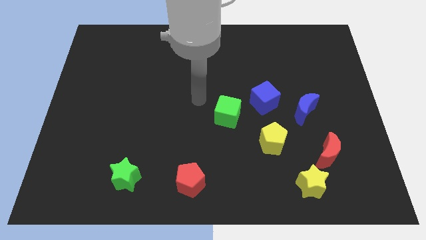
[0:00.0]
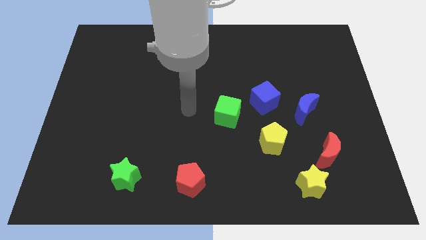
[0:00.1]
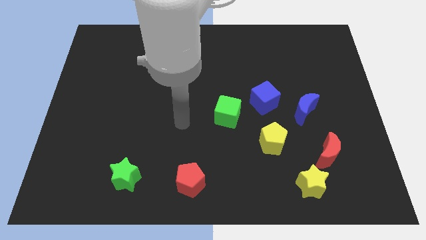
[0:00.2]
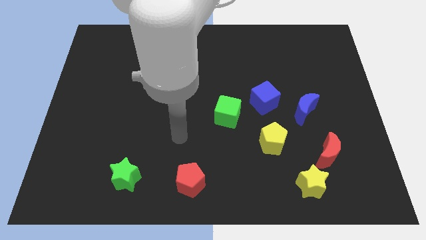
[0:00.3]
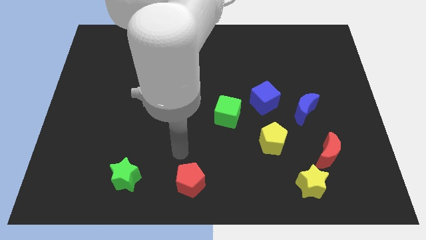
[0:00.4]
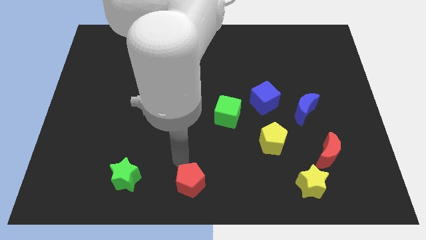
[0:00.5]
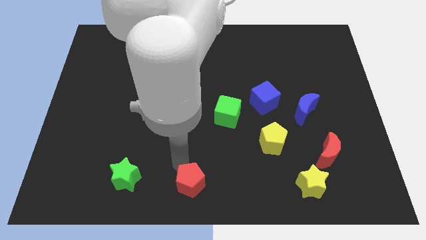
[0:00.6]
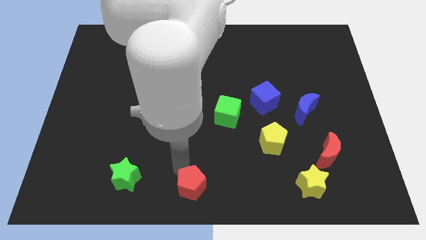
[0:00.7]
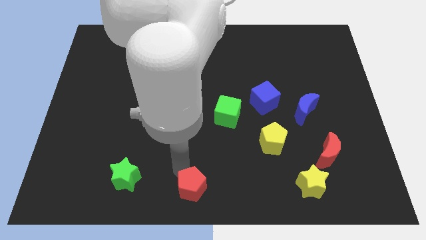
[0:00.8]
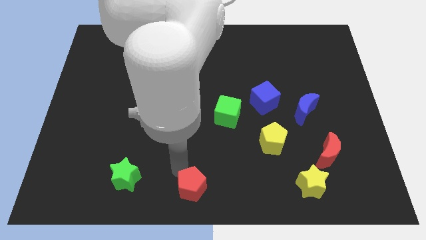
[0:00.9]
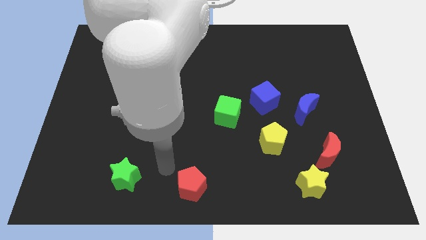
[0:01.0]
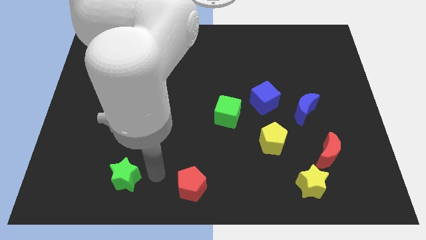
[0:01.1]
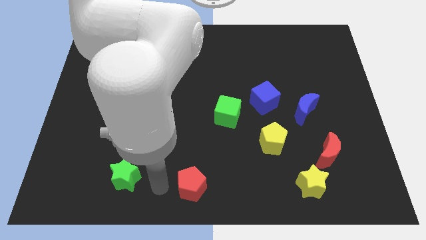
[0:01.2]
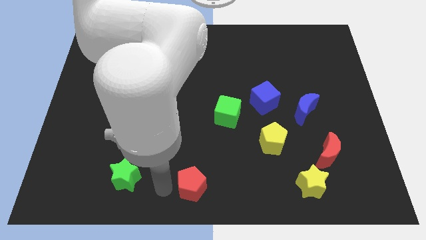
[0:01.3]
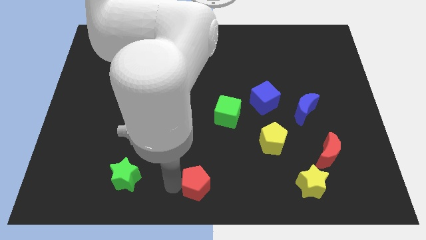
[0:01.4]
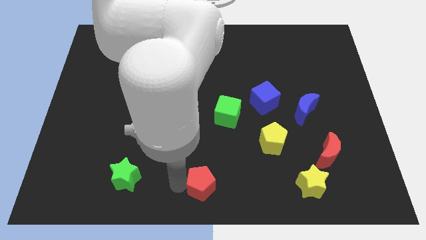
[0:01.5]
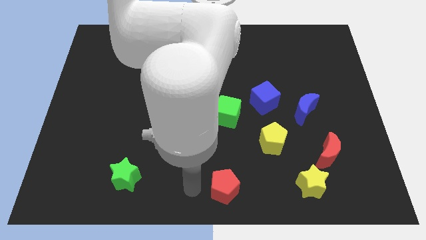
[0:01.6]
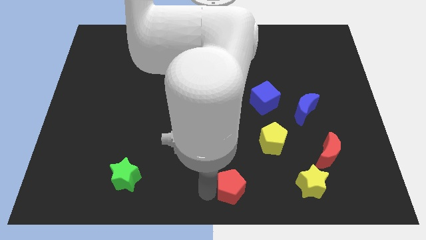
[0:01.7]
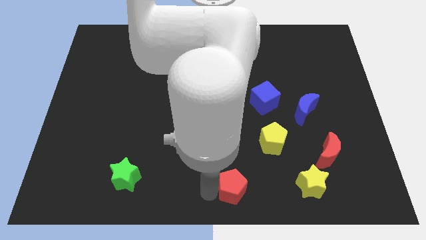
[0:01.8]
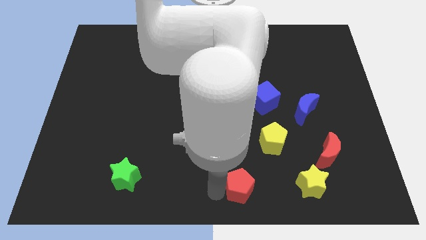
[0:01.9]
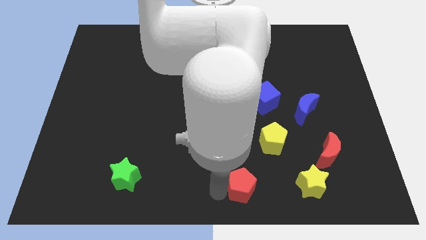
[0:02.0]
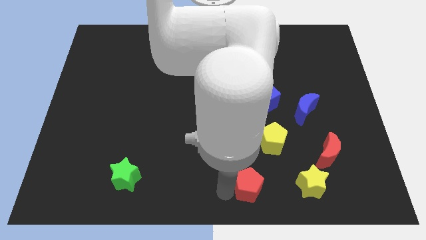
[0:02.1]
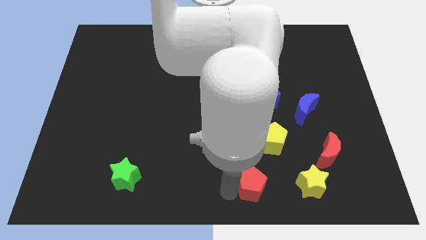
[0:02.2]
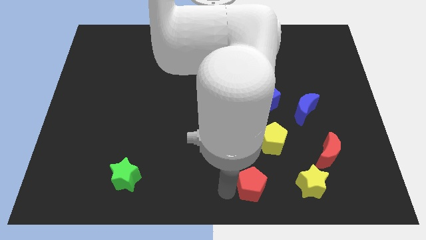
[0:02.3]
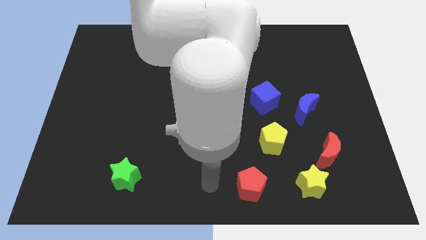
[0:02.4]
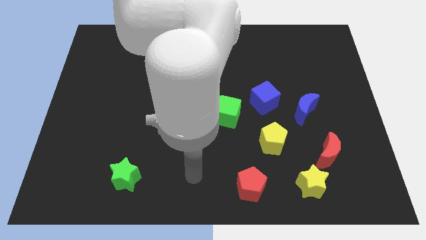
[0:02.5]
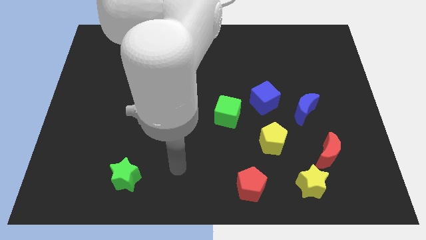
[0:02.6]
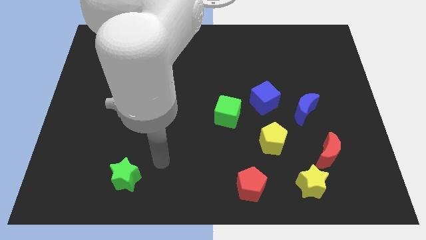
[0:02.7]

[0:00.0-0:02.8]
slide the red pentagon to the right

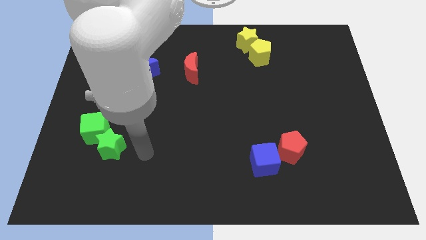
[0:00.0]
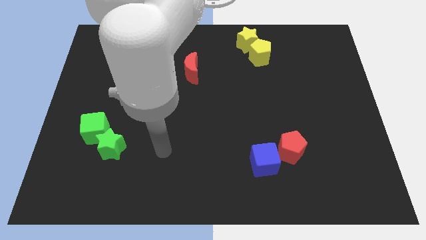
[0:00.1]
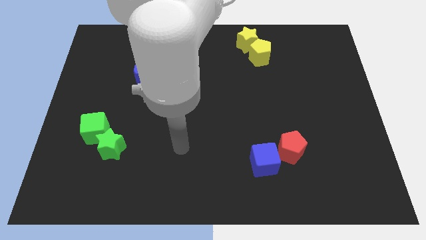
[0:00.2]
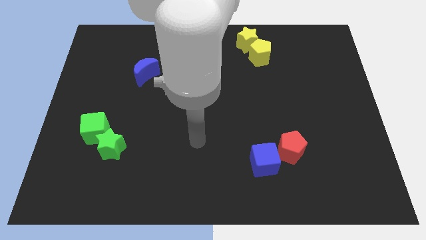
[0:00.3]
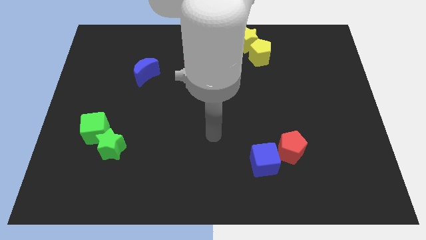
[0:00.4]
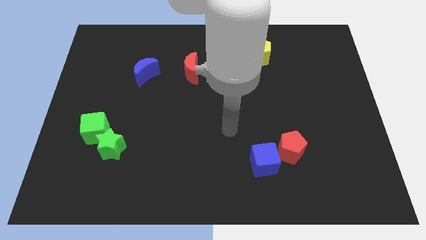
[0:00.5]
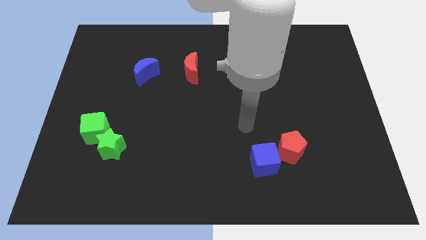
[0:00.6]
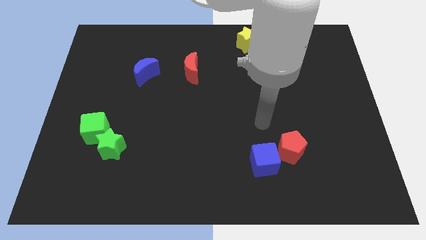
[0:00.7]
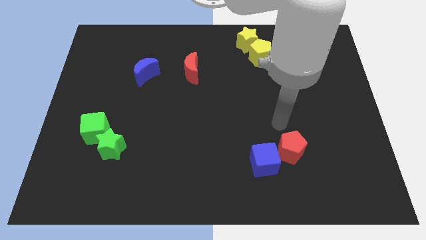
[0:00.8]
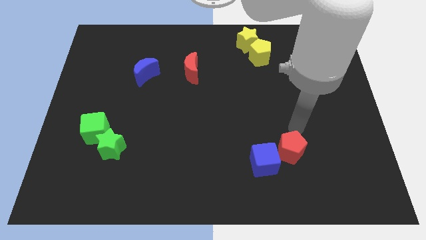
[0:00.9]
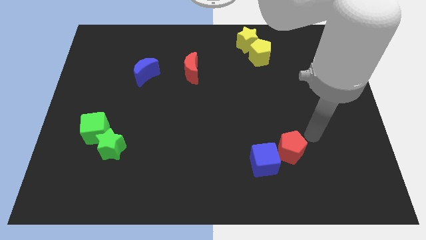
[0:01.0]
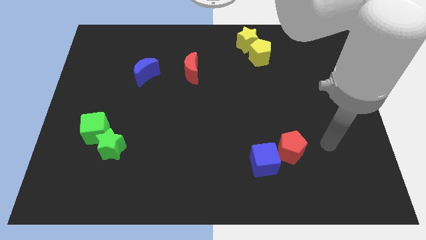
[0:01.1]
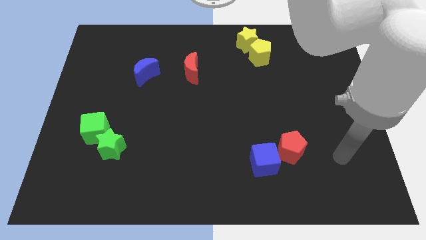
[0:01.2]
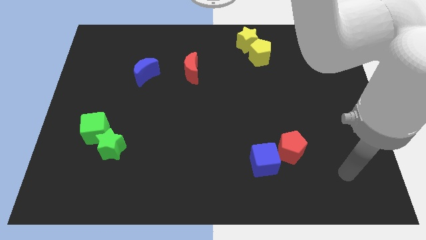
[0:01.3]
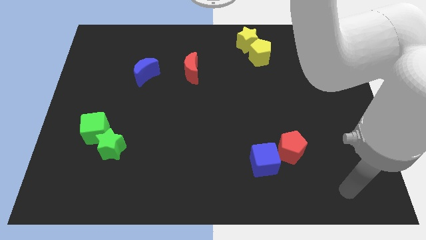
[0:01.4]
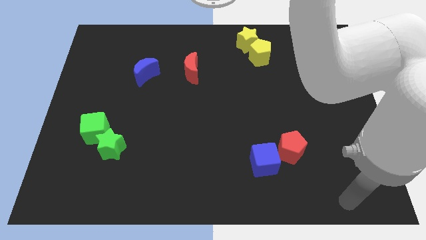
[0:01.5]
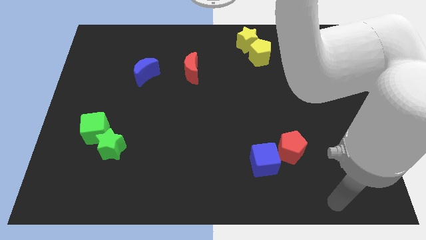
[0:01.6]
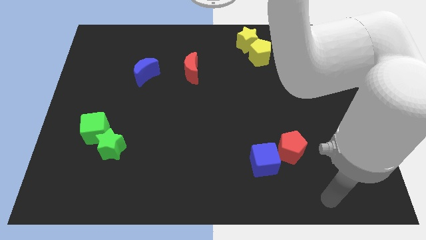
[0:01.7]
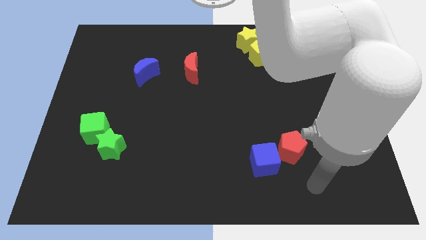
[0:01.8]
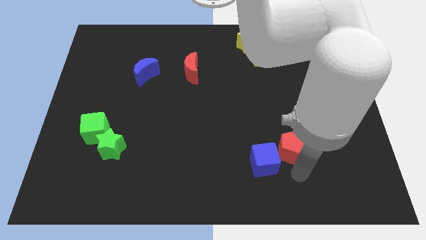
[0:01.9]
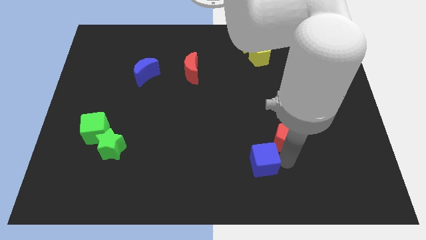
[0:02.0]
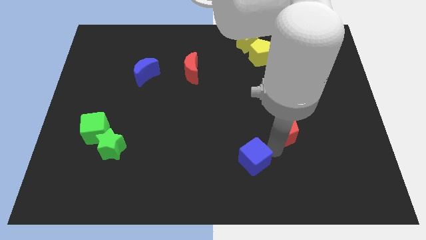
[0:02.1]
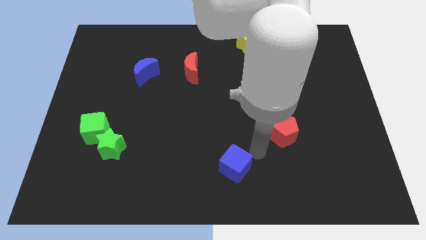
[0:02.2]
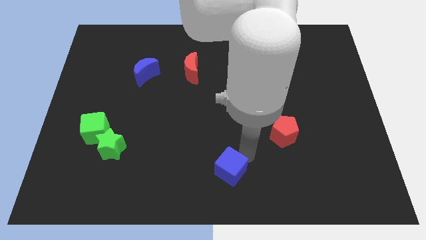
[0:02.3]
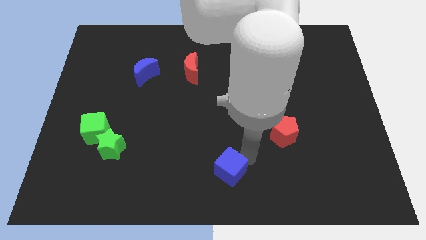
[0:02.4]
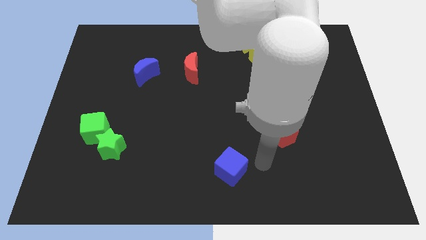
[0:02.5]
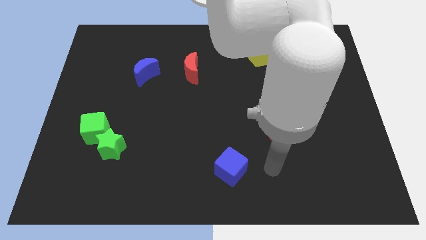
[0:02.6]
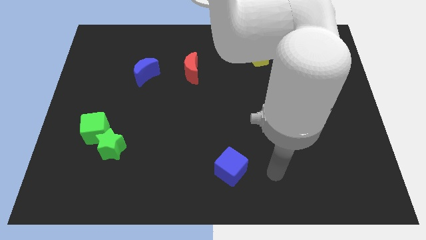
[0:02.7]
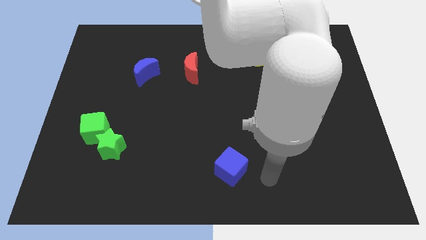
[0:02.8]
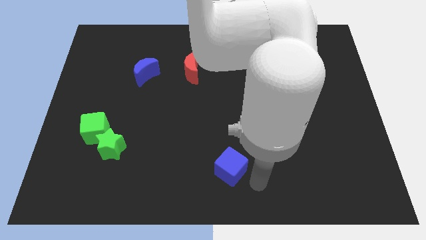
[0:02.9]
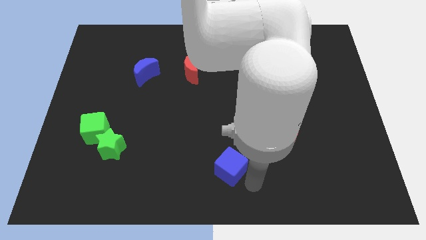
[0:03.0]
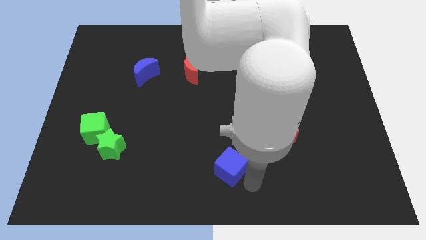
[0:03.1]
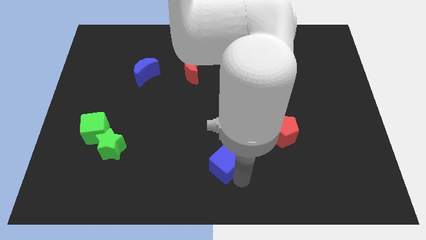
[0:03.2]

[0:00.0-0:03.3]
move the blue cube slightly towards the left

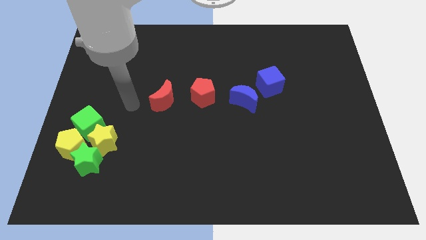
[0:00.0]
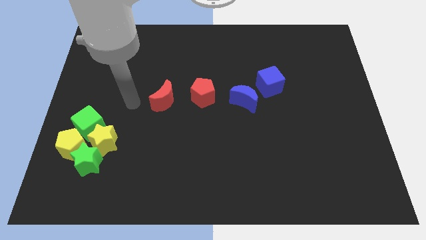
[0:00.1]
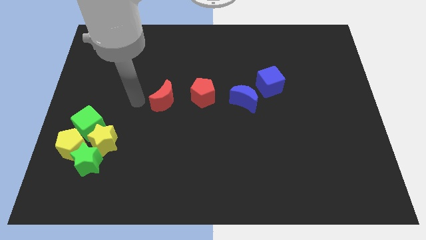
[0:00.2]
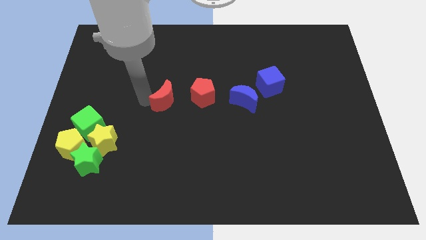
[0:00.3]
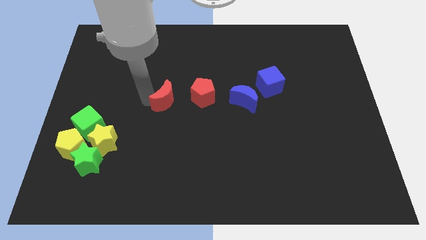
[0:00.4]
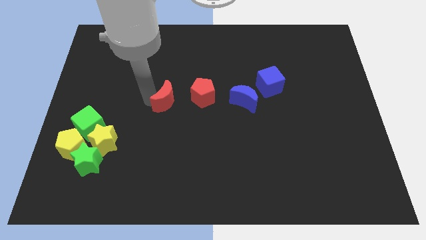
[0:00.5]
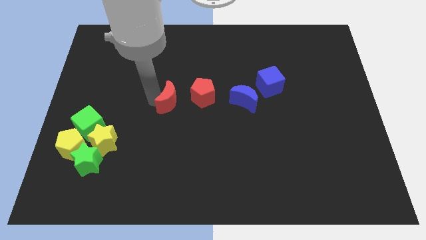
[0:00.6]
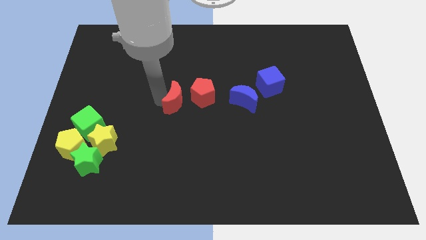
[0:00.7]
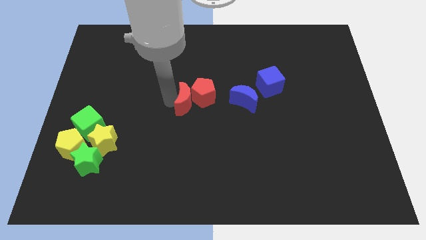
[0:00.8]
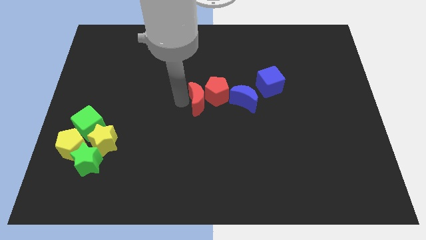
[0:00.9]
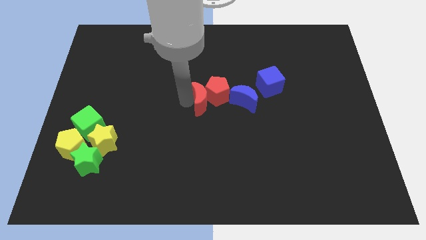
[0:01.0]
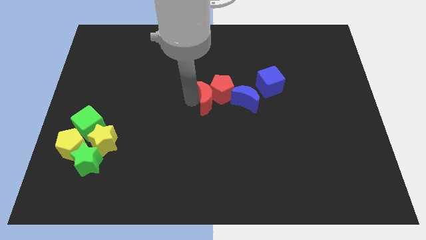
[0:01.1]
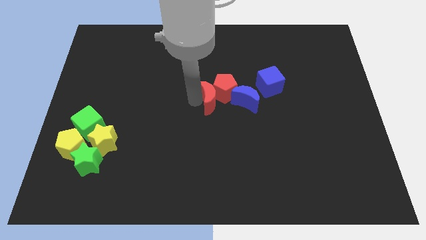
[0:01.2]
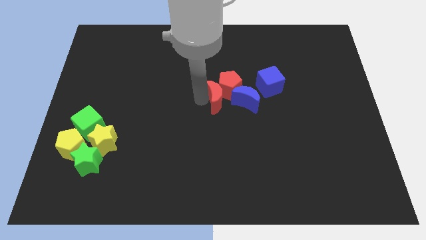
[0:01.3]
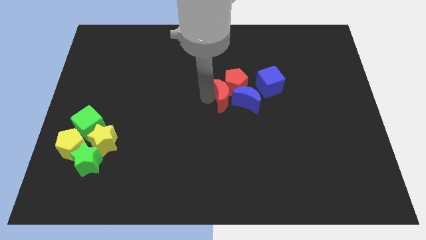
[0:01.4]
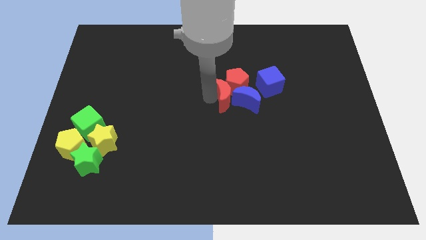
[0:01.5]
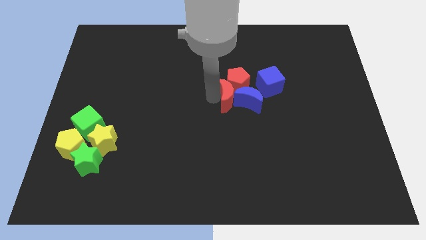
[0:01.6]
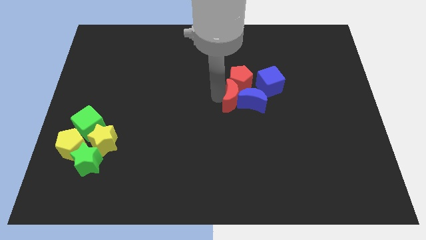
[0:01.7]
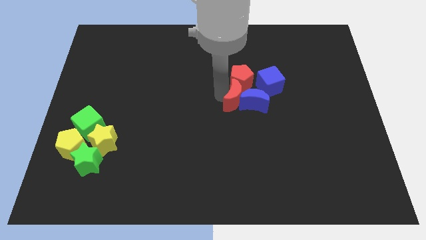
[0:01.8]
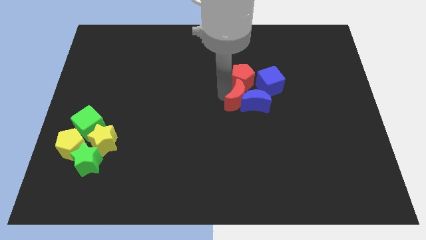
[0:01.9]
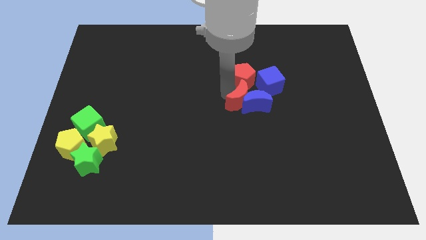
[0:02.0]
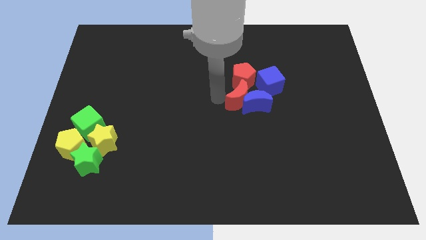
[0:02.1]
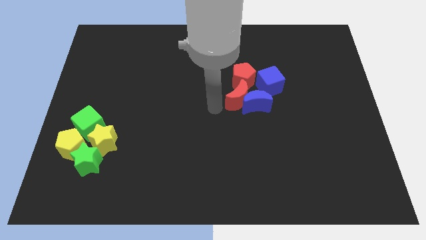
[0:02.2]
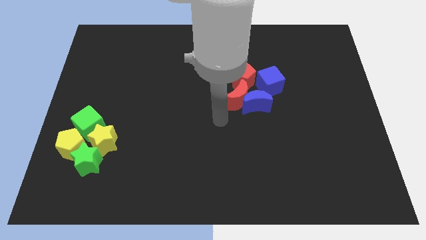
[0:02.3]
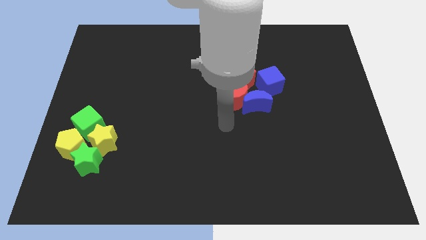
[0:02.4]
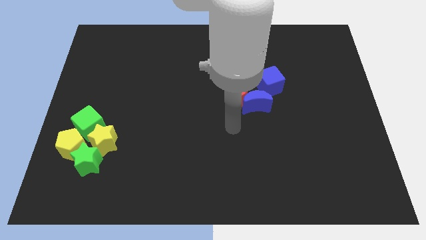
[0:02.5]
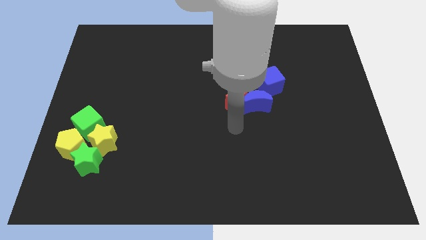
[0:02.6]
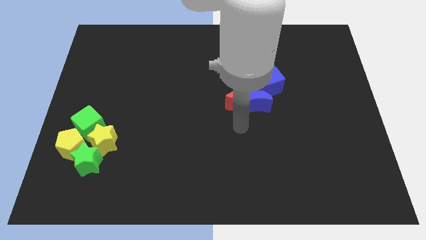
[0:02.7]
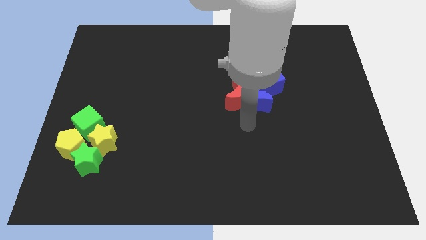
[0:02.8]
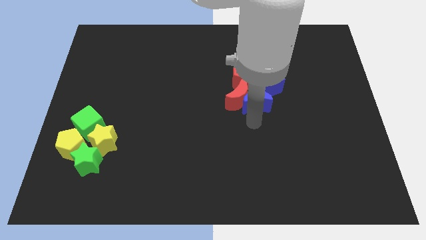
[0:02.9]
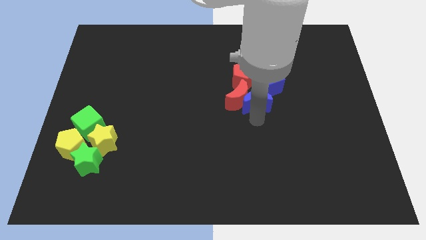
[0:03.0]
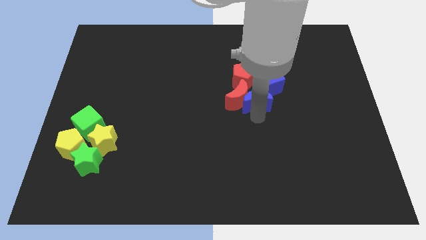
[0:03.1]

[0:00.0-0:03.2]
push red moon in between blue moon and red pentagon
